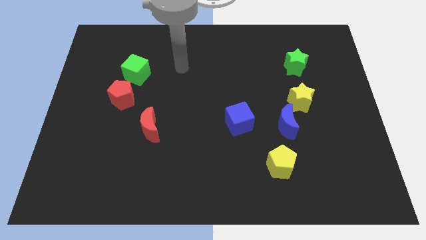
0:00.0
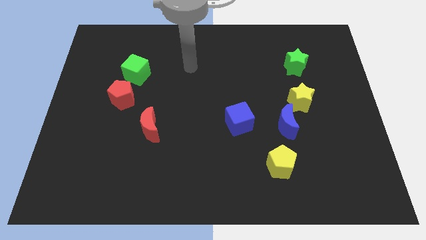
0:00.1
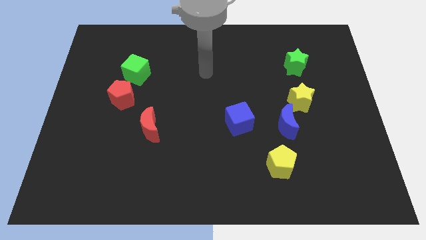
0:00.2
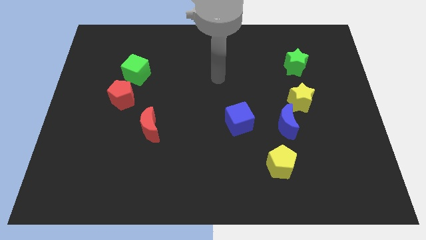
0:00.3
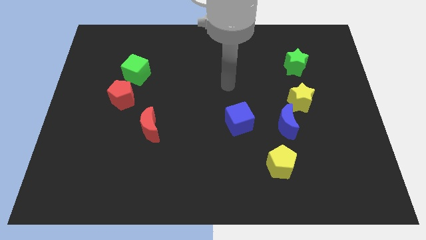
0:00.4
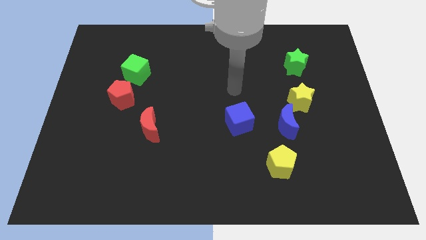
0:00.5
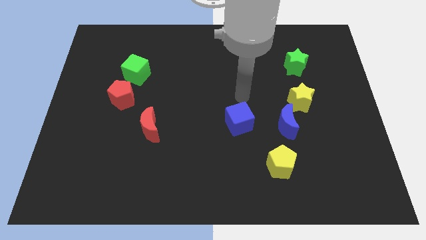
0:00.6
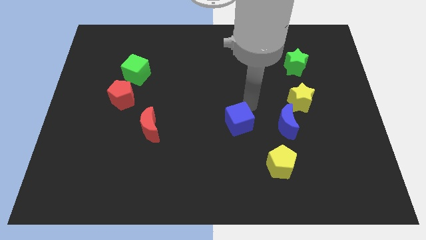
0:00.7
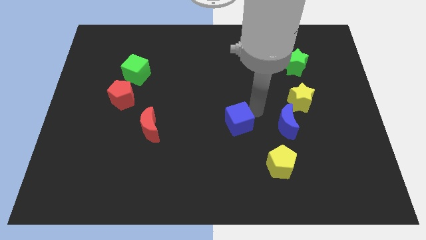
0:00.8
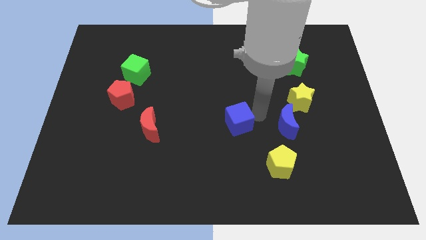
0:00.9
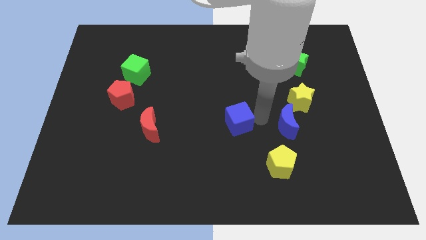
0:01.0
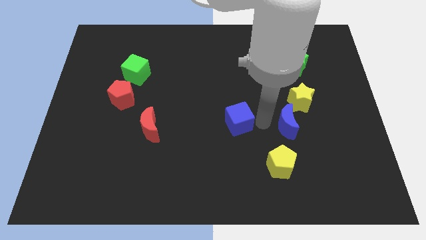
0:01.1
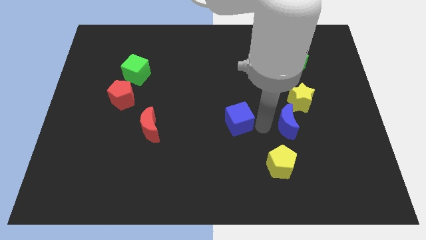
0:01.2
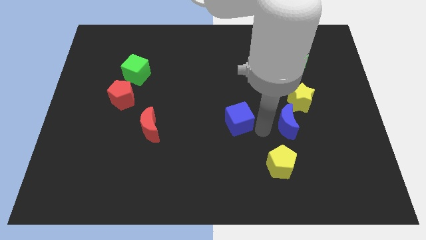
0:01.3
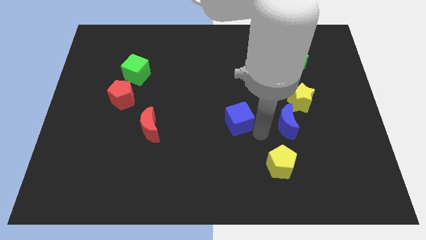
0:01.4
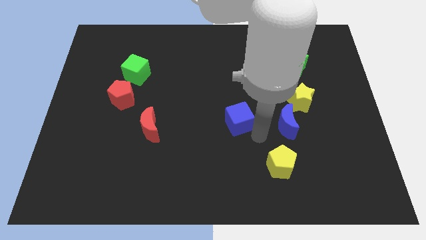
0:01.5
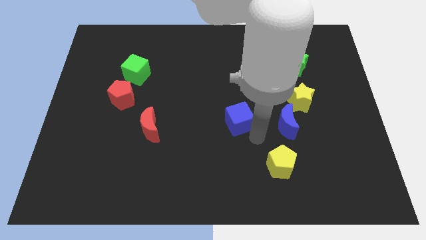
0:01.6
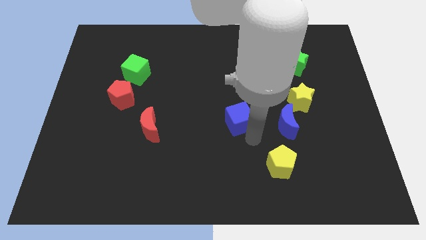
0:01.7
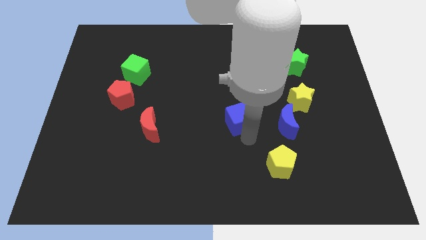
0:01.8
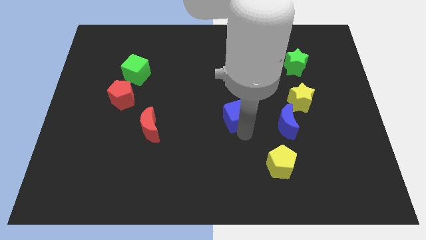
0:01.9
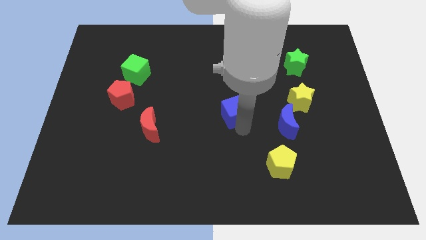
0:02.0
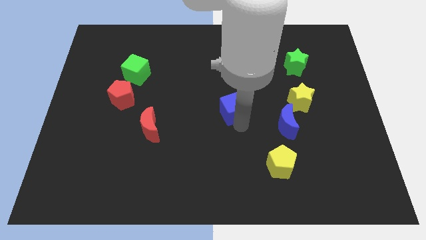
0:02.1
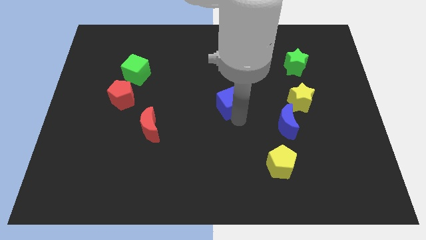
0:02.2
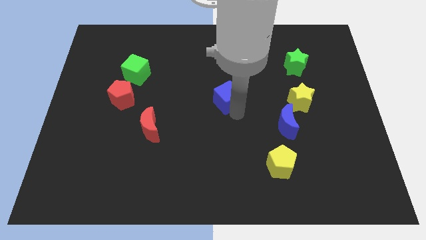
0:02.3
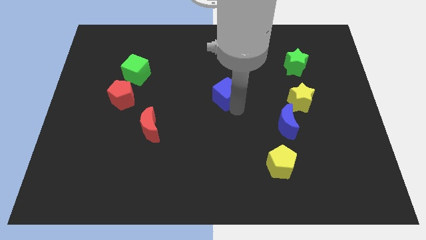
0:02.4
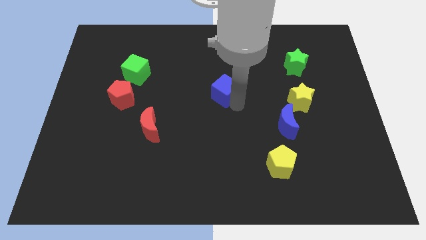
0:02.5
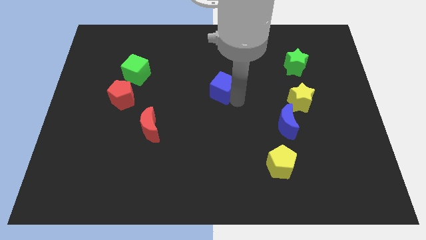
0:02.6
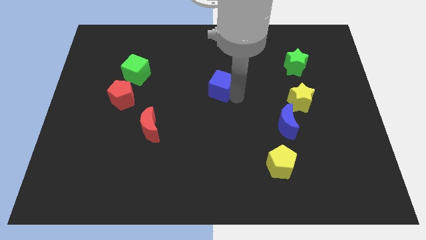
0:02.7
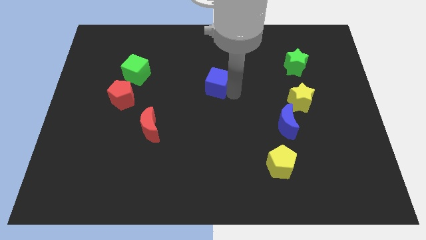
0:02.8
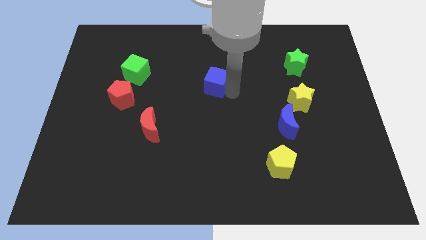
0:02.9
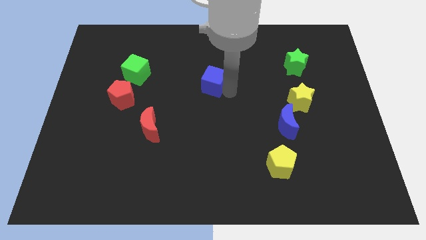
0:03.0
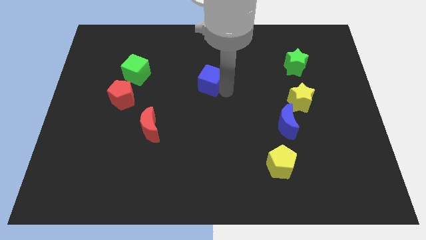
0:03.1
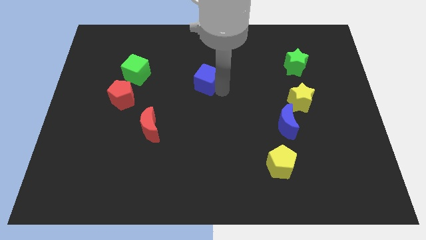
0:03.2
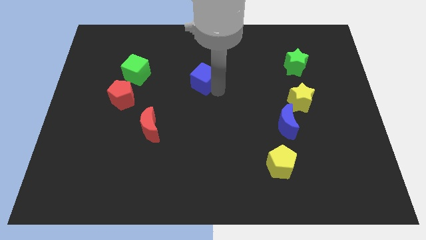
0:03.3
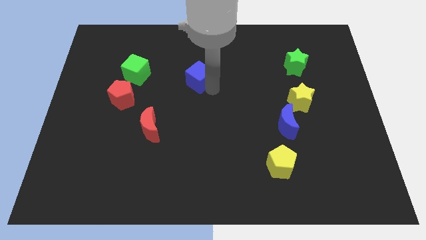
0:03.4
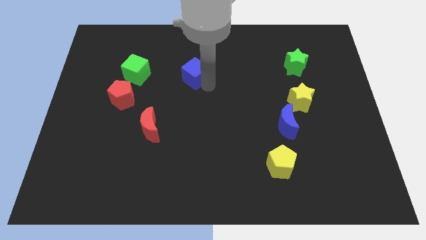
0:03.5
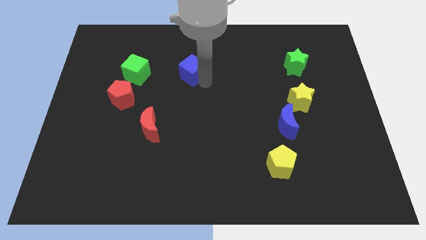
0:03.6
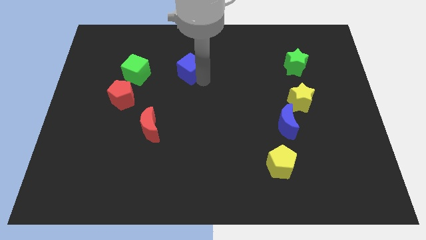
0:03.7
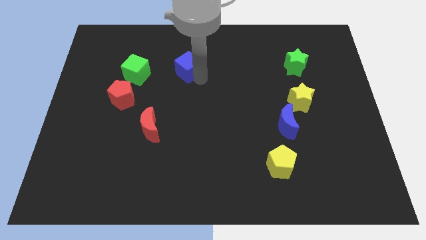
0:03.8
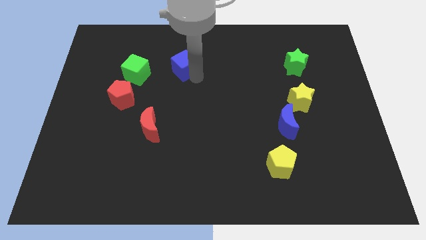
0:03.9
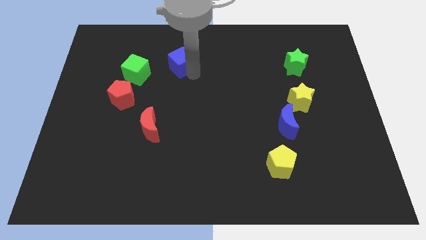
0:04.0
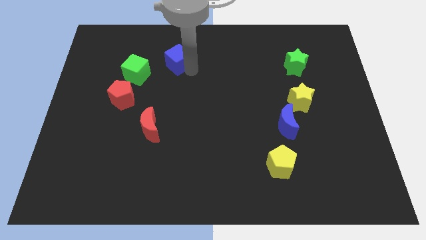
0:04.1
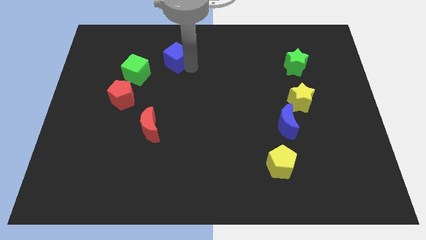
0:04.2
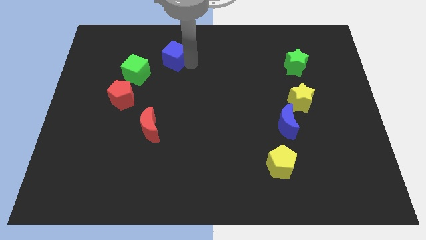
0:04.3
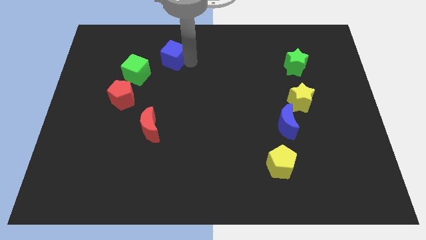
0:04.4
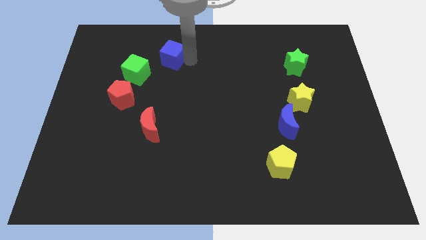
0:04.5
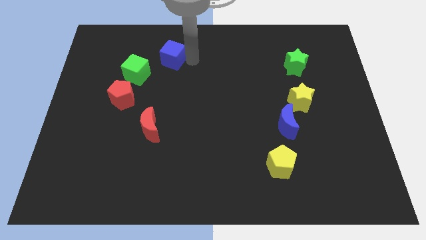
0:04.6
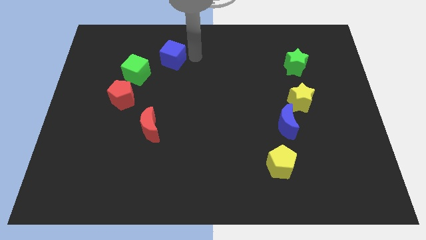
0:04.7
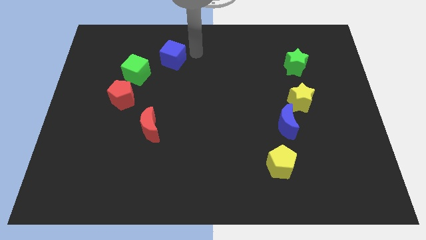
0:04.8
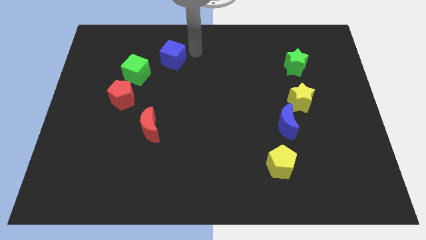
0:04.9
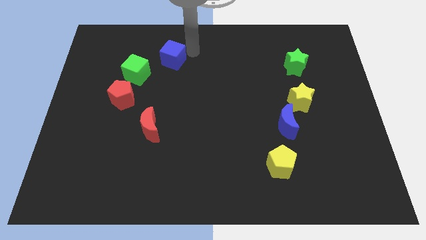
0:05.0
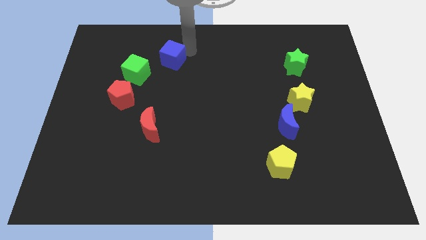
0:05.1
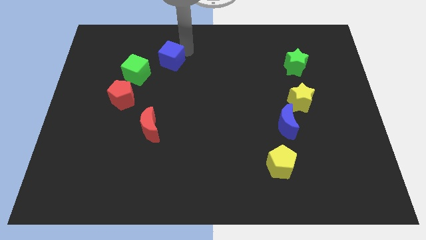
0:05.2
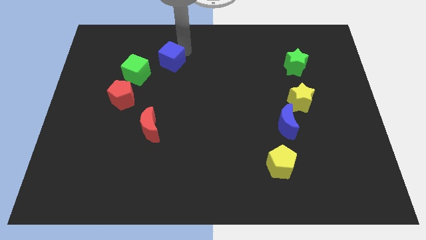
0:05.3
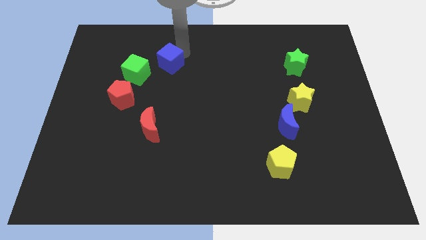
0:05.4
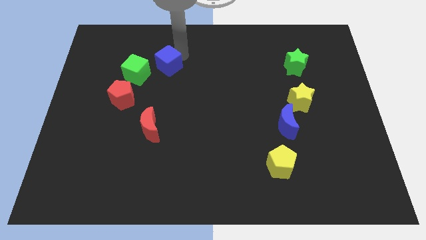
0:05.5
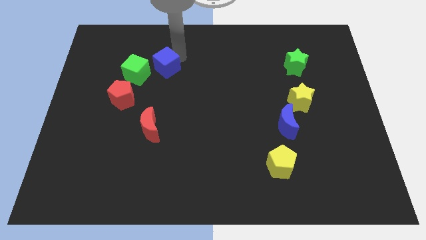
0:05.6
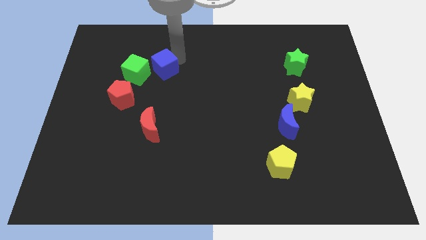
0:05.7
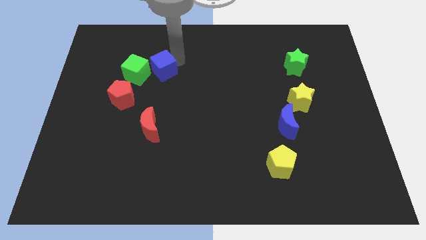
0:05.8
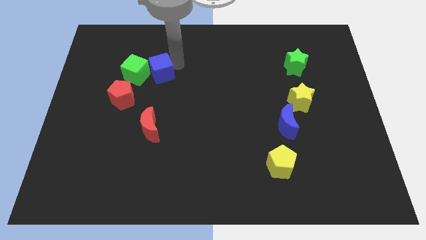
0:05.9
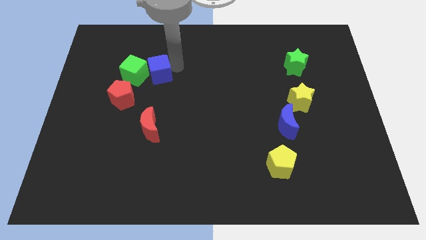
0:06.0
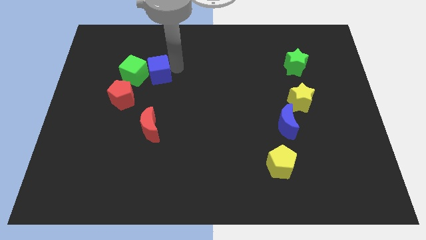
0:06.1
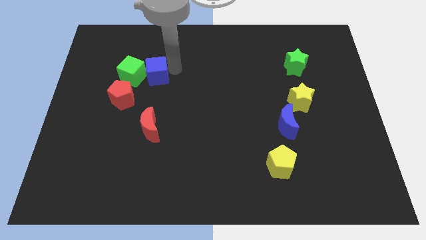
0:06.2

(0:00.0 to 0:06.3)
push the blue cube next to the green cube

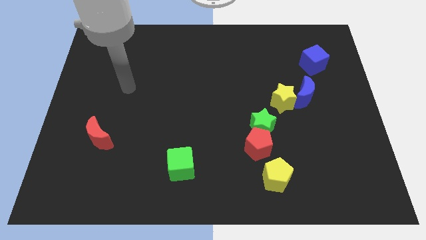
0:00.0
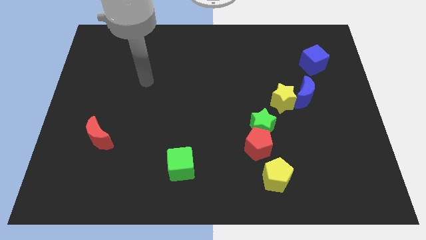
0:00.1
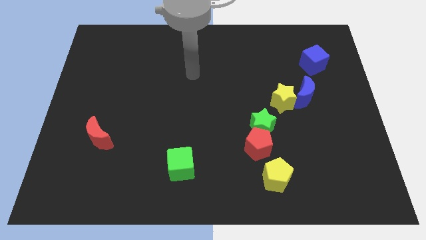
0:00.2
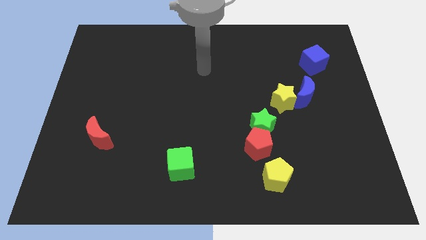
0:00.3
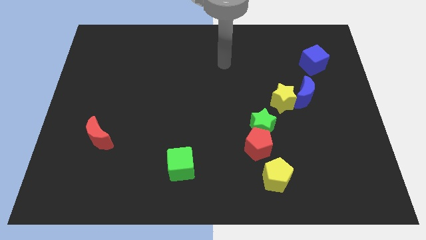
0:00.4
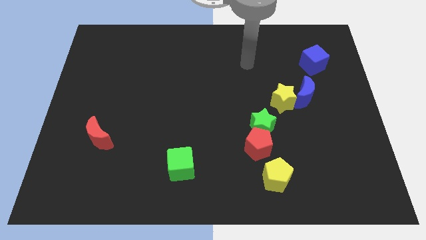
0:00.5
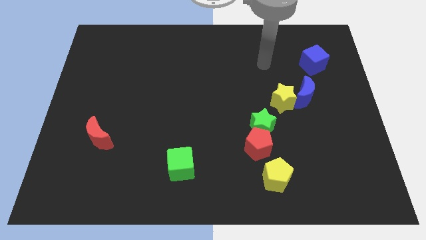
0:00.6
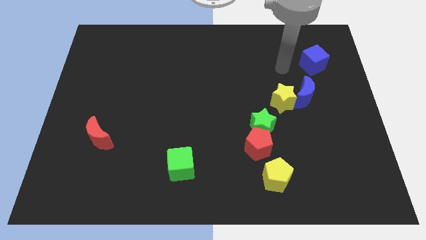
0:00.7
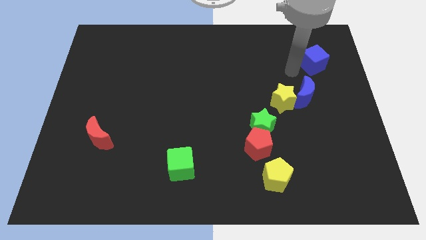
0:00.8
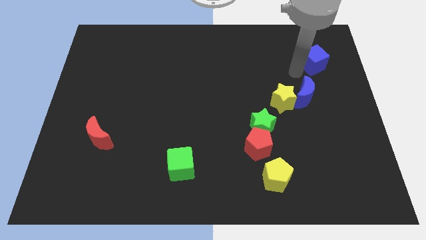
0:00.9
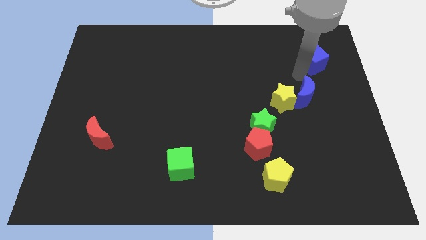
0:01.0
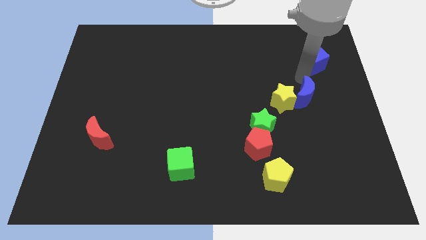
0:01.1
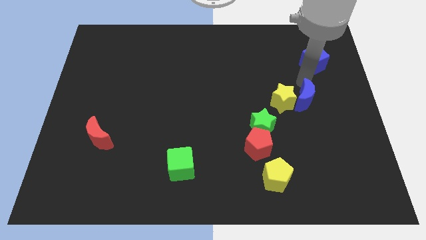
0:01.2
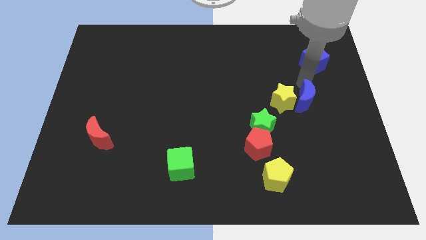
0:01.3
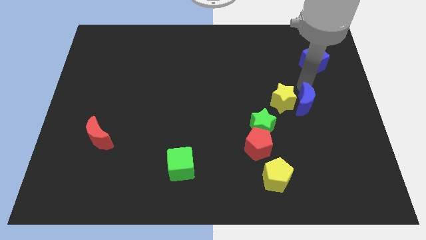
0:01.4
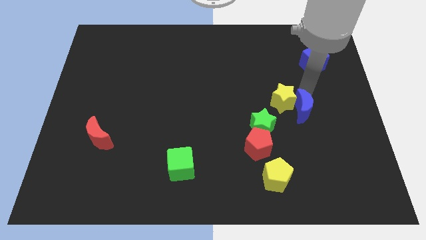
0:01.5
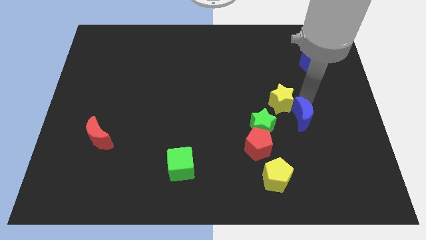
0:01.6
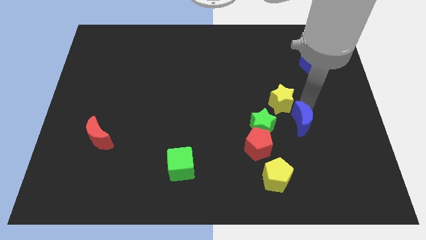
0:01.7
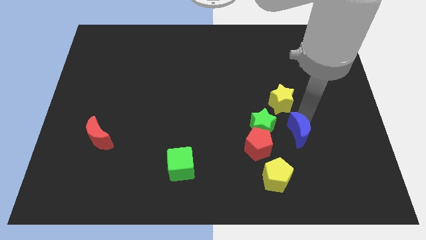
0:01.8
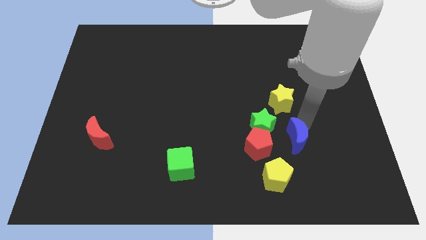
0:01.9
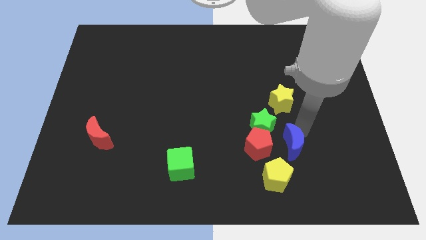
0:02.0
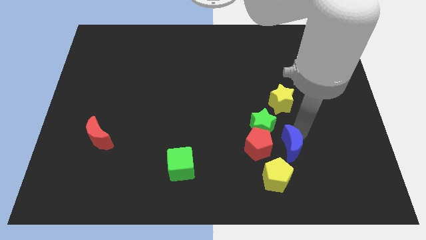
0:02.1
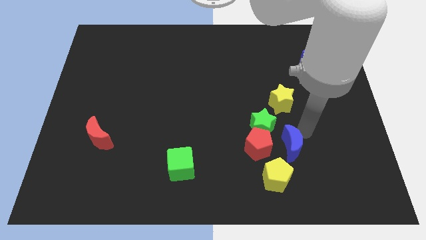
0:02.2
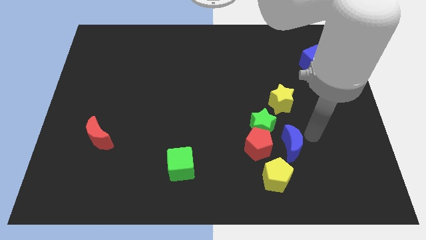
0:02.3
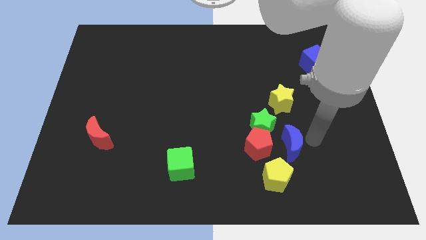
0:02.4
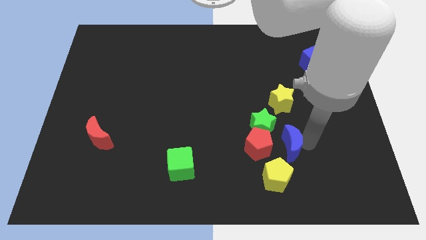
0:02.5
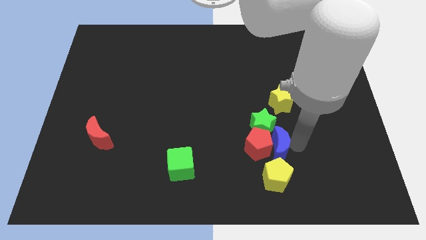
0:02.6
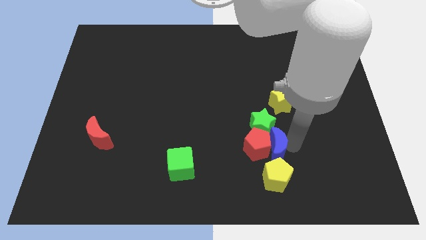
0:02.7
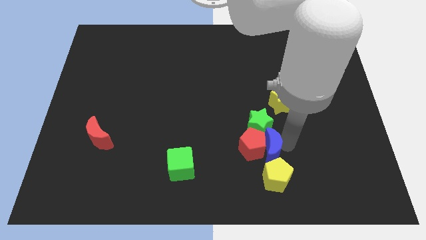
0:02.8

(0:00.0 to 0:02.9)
slide the blue moon close to the red pentagon
